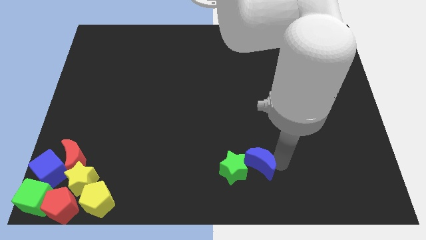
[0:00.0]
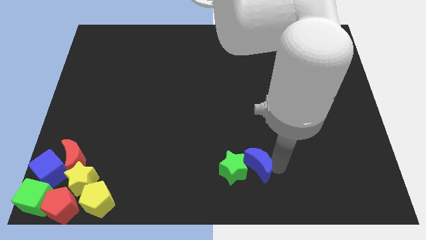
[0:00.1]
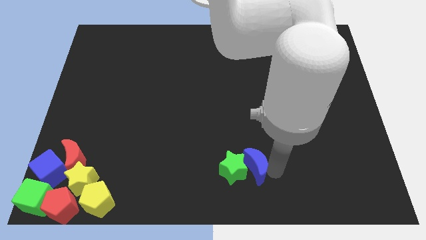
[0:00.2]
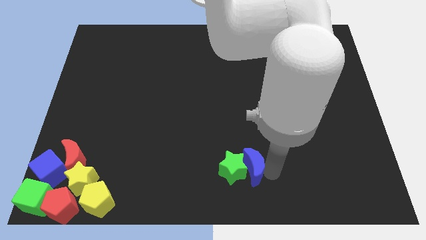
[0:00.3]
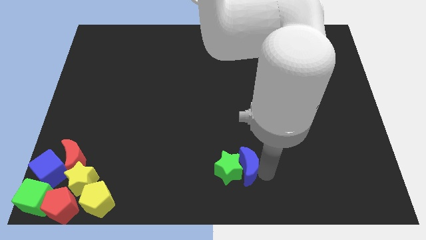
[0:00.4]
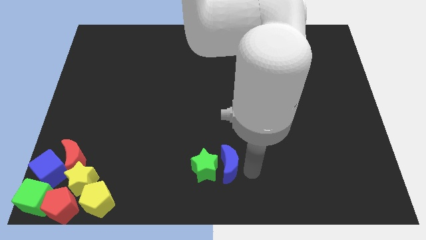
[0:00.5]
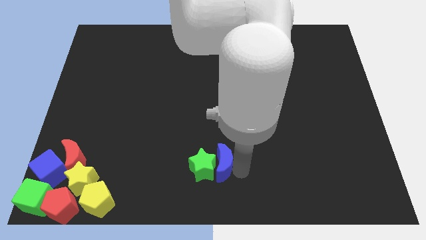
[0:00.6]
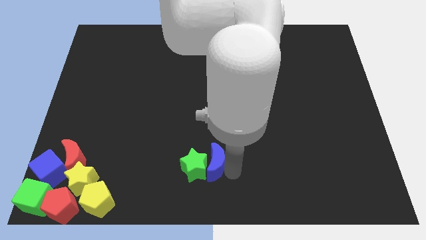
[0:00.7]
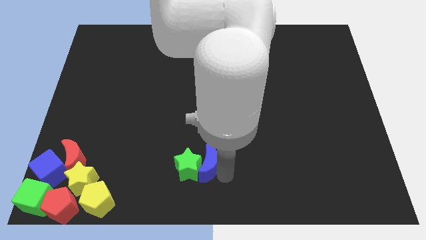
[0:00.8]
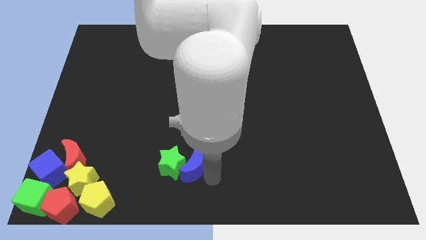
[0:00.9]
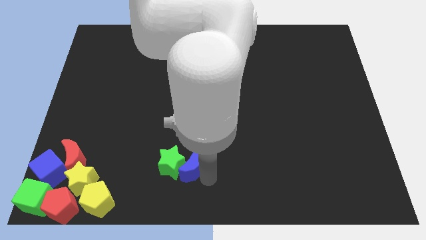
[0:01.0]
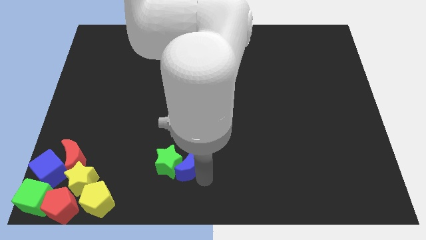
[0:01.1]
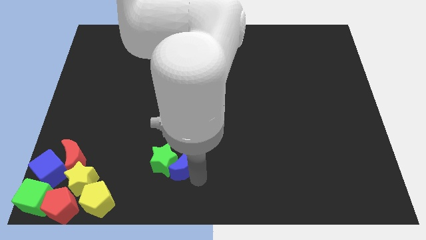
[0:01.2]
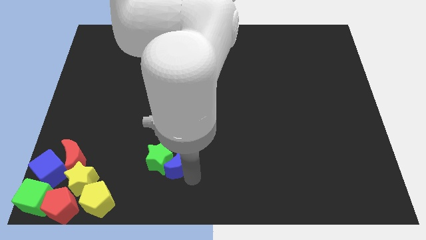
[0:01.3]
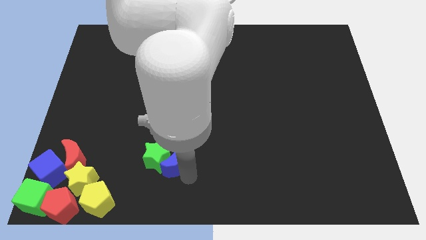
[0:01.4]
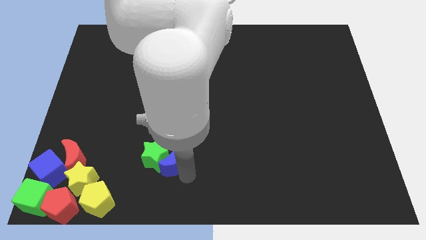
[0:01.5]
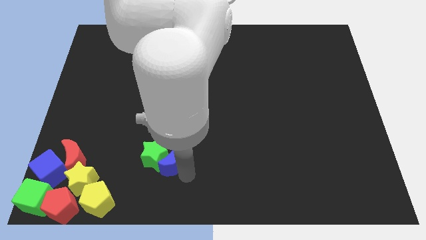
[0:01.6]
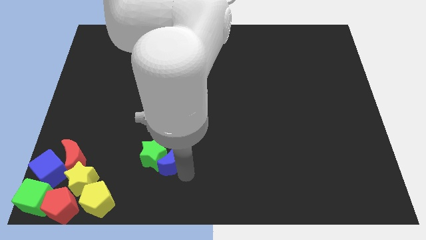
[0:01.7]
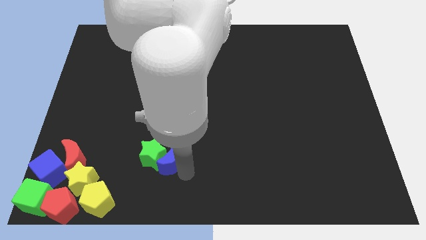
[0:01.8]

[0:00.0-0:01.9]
push the green star along with the blue moon towards the left side

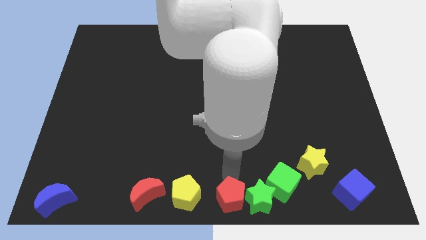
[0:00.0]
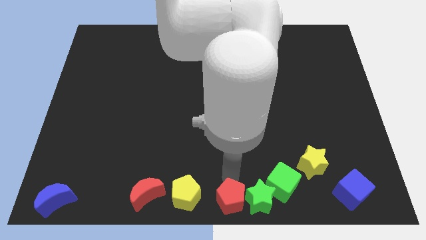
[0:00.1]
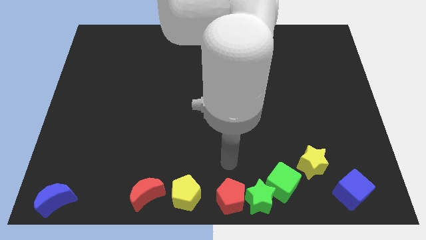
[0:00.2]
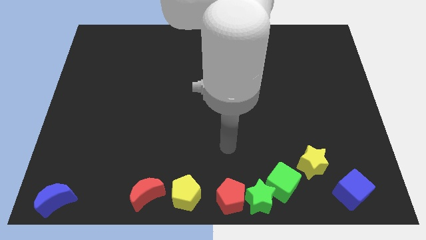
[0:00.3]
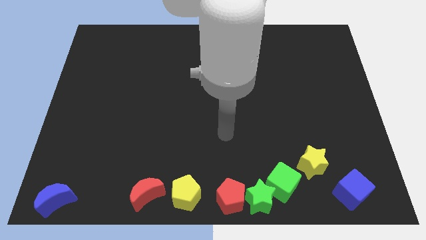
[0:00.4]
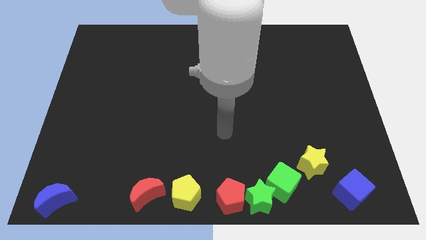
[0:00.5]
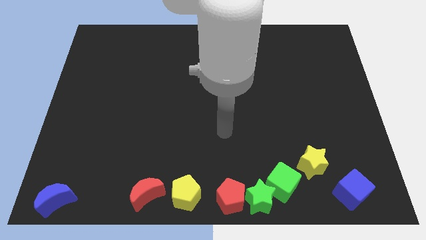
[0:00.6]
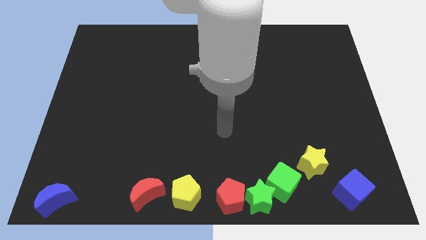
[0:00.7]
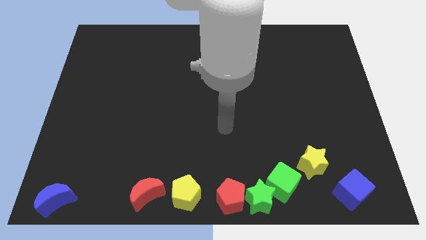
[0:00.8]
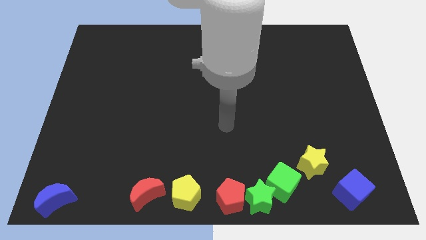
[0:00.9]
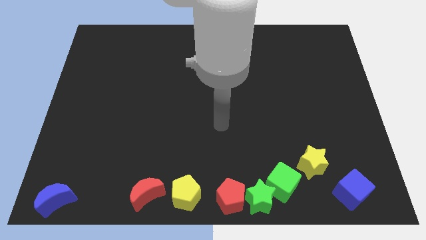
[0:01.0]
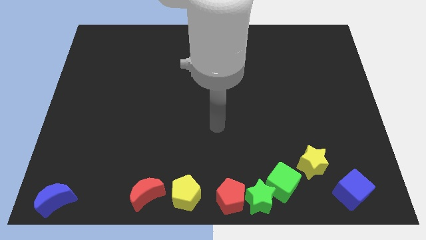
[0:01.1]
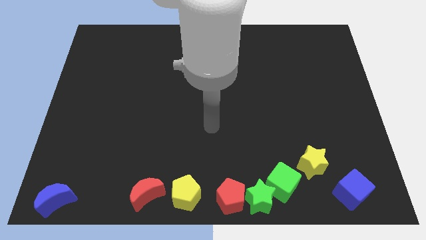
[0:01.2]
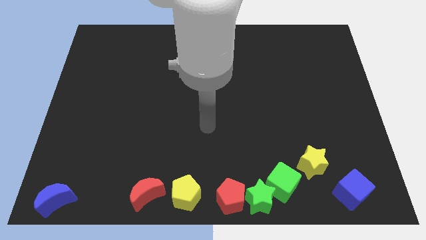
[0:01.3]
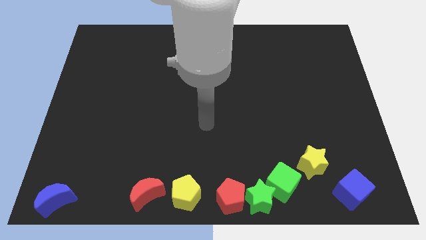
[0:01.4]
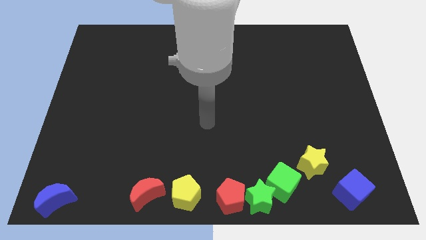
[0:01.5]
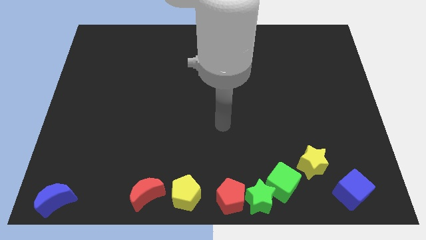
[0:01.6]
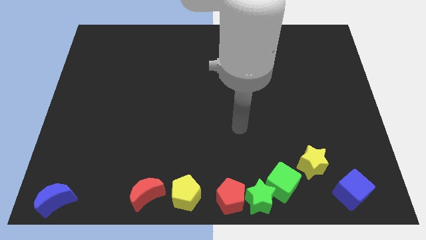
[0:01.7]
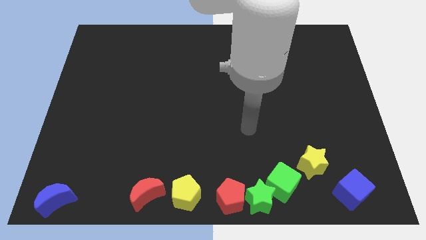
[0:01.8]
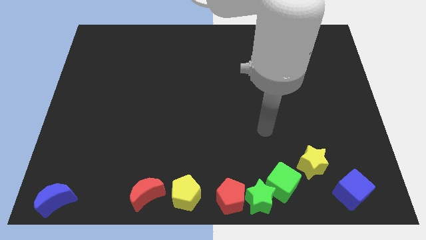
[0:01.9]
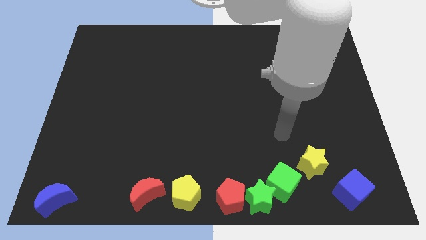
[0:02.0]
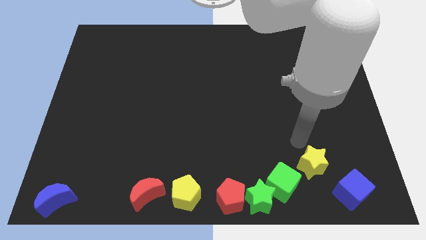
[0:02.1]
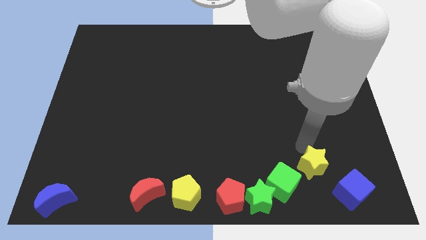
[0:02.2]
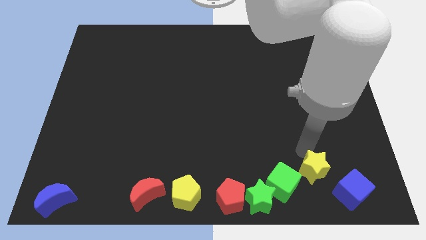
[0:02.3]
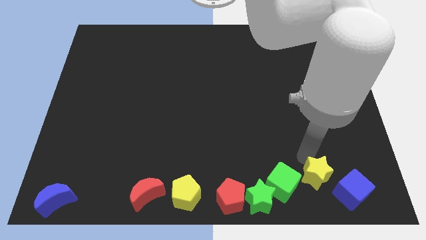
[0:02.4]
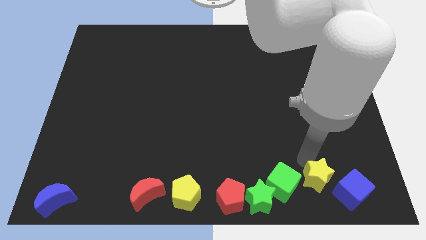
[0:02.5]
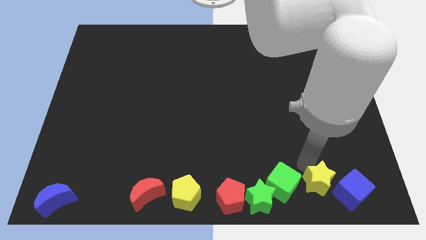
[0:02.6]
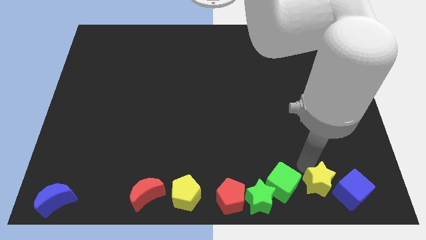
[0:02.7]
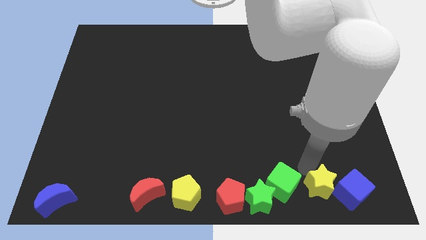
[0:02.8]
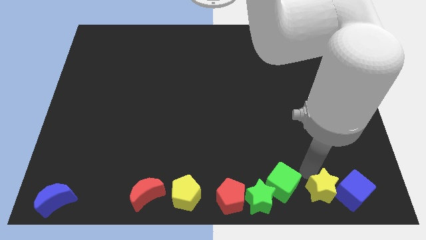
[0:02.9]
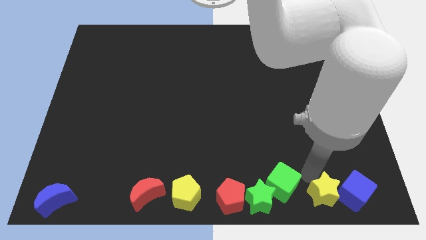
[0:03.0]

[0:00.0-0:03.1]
move your arm away from the red pentagon

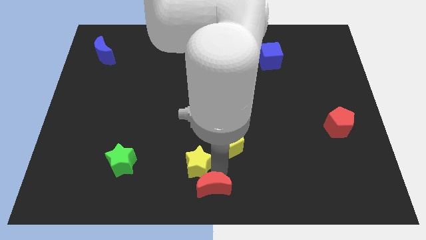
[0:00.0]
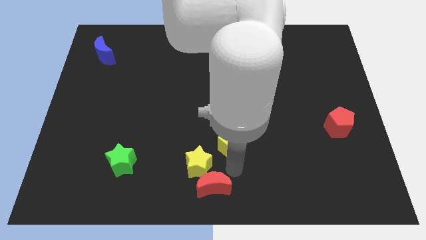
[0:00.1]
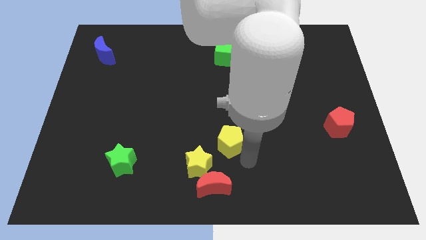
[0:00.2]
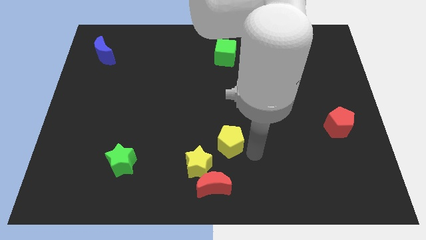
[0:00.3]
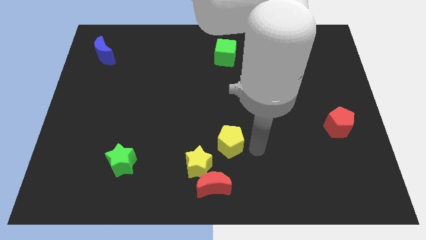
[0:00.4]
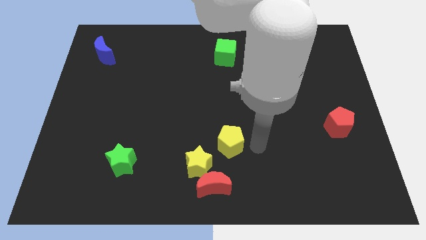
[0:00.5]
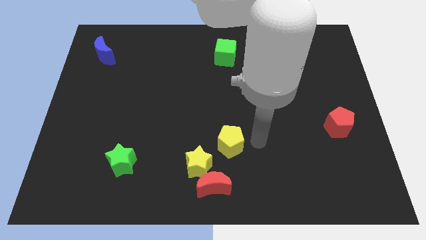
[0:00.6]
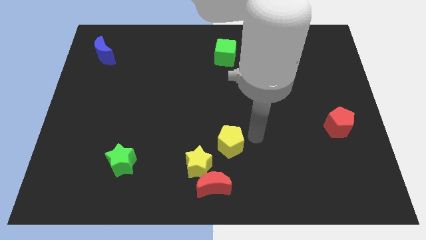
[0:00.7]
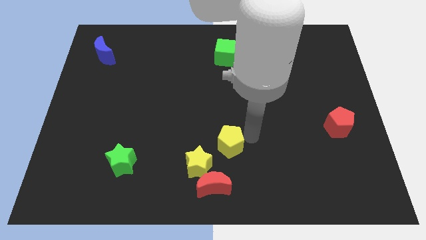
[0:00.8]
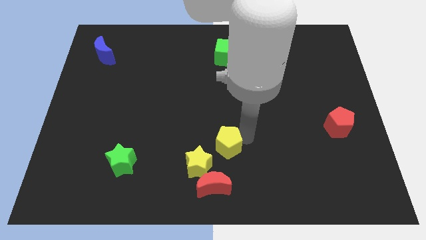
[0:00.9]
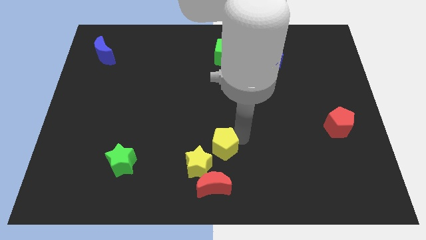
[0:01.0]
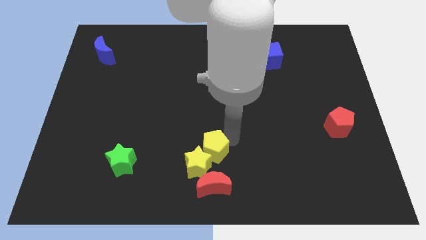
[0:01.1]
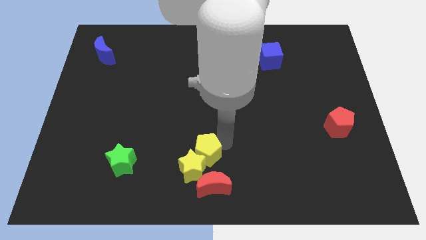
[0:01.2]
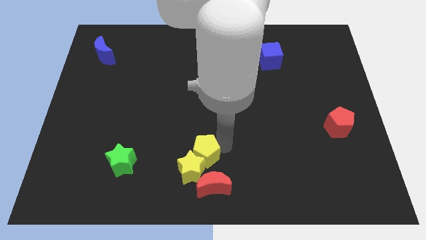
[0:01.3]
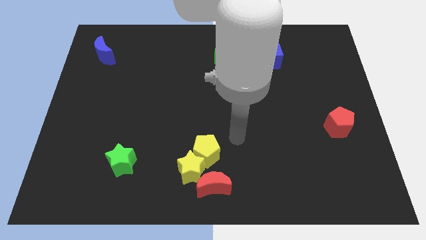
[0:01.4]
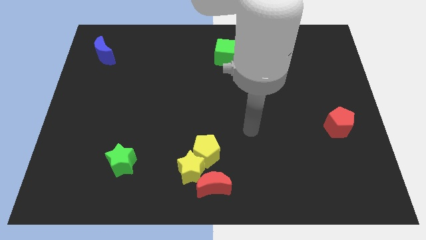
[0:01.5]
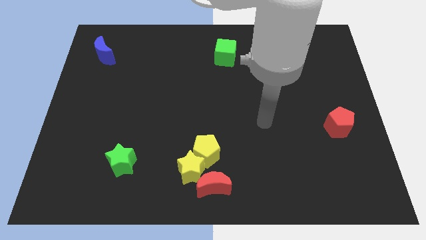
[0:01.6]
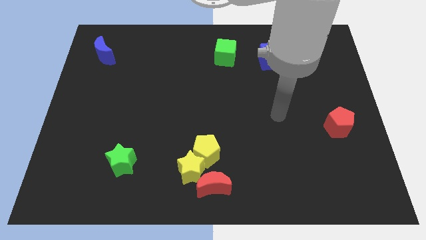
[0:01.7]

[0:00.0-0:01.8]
push the yellow pentagon into the yellow star

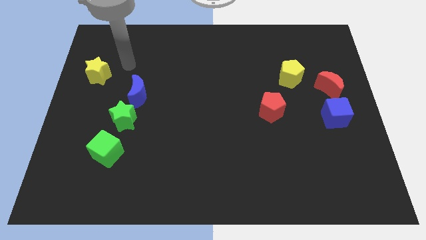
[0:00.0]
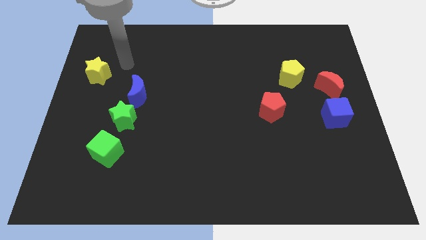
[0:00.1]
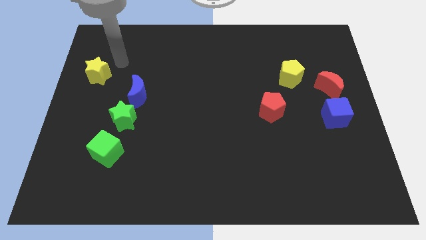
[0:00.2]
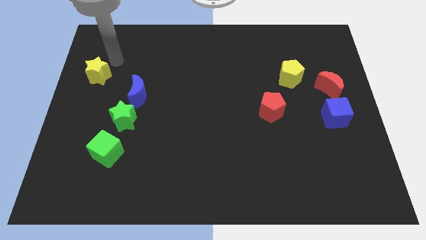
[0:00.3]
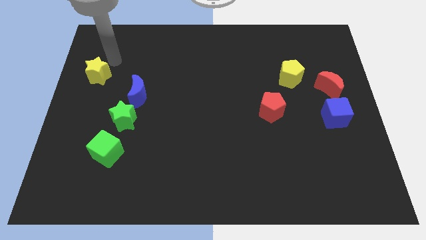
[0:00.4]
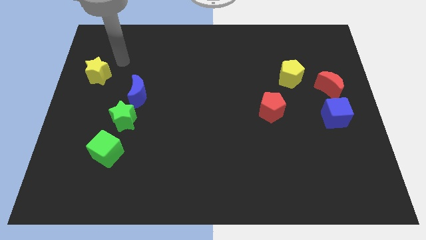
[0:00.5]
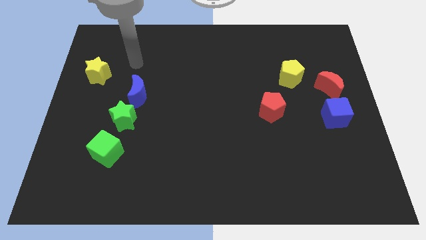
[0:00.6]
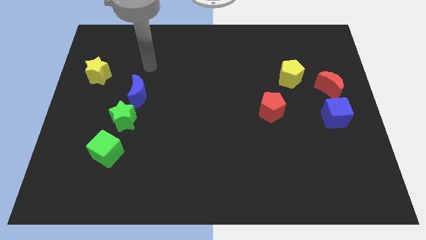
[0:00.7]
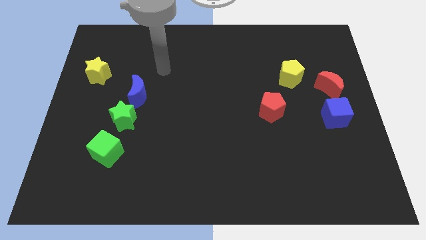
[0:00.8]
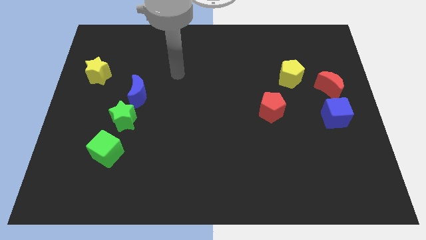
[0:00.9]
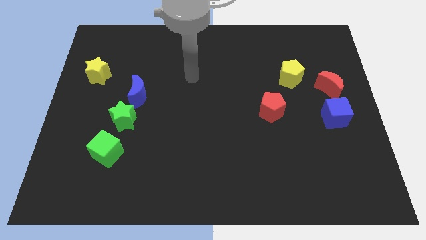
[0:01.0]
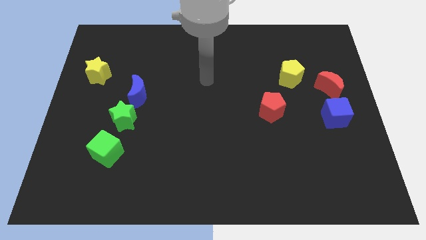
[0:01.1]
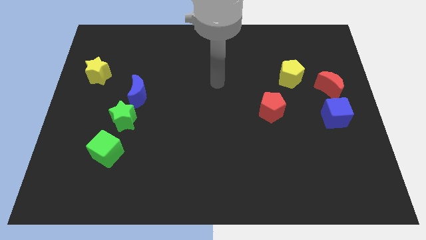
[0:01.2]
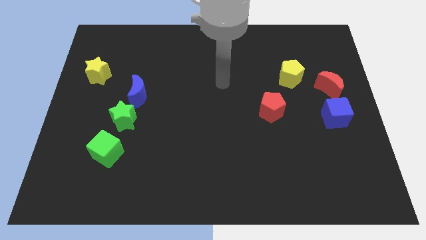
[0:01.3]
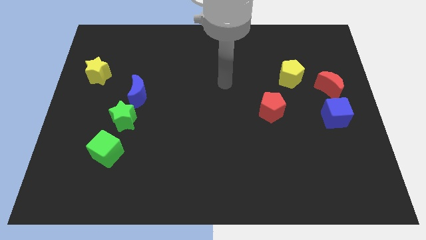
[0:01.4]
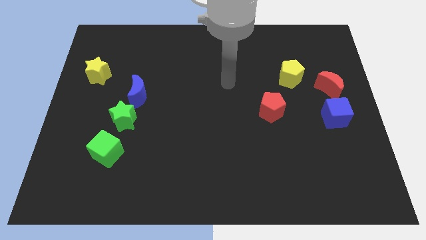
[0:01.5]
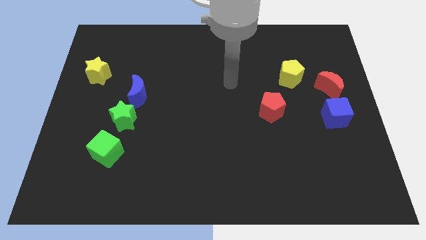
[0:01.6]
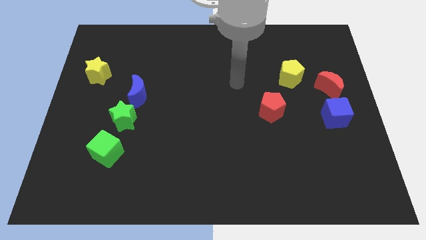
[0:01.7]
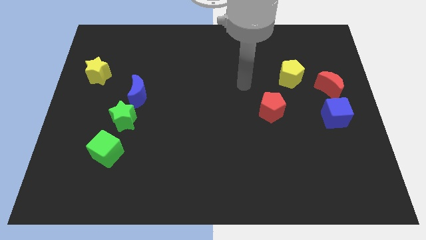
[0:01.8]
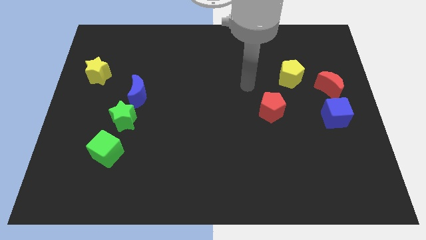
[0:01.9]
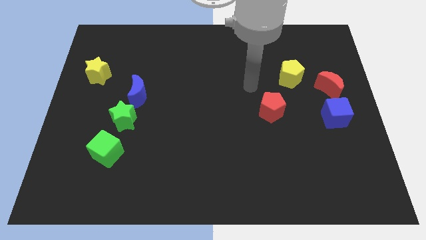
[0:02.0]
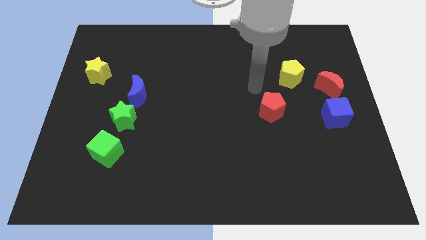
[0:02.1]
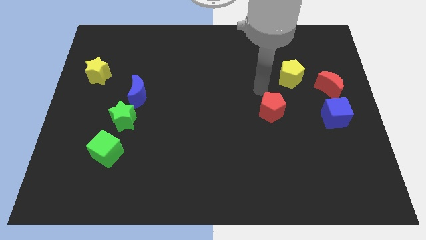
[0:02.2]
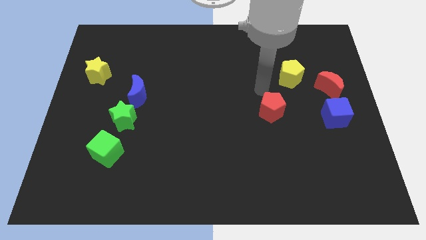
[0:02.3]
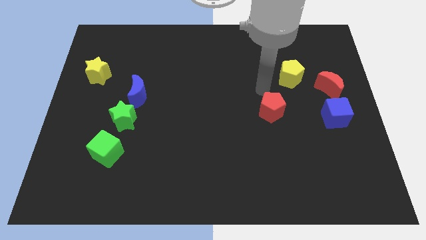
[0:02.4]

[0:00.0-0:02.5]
place the arm near the red pentagon
